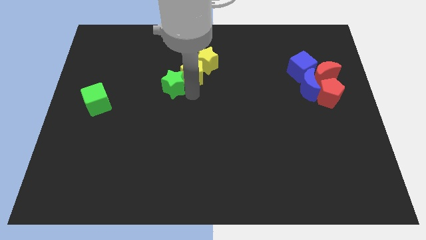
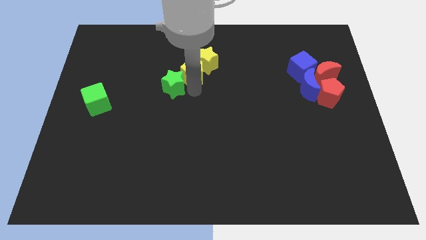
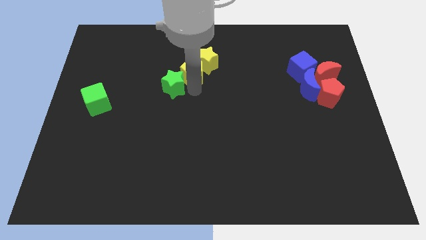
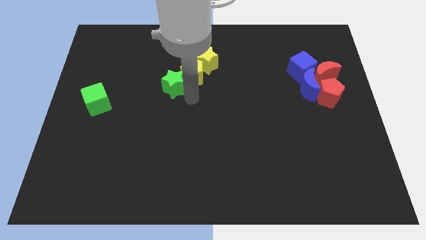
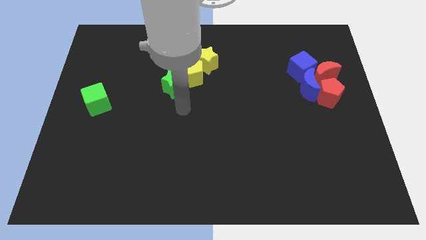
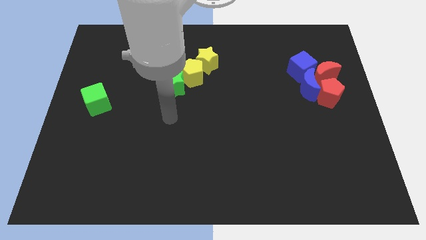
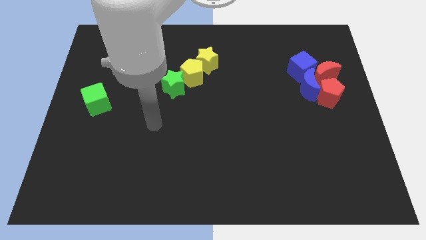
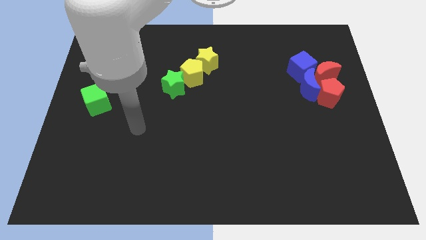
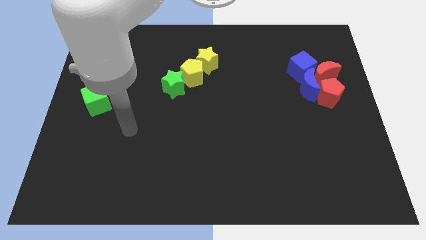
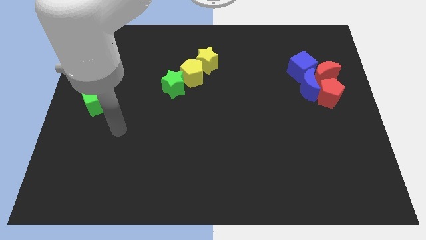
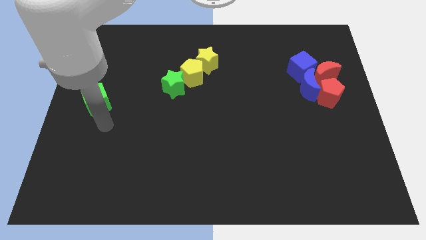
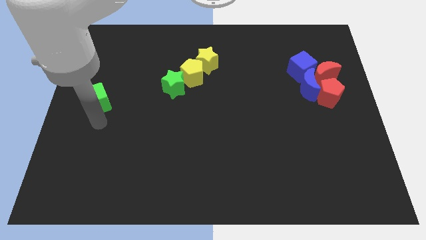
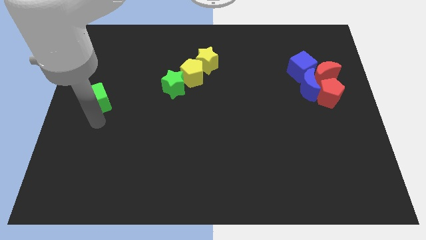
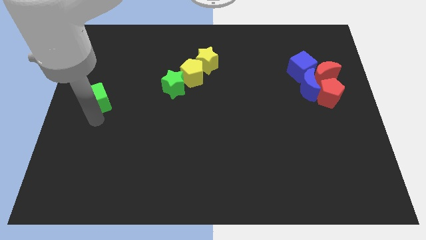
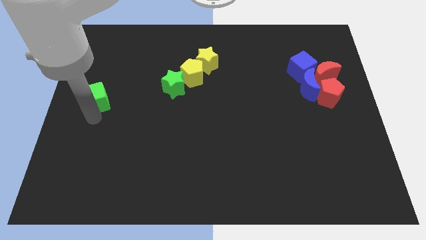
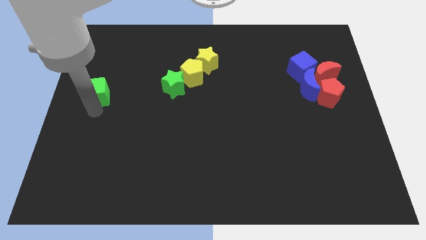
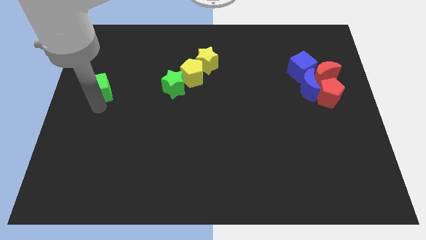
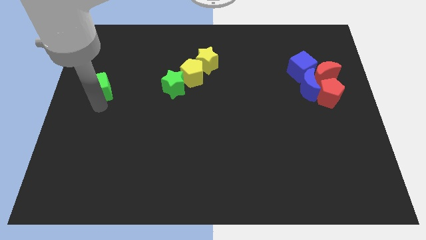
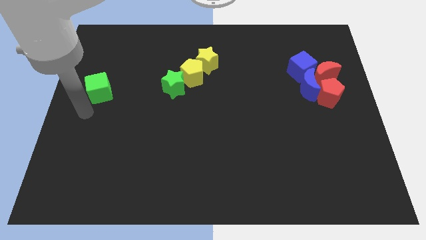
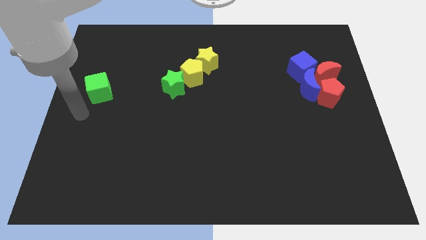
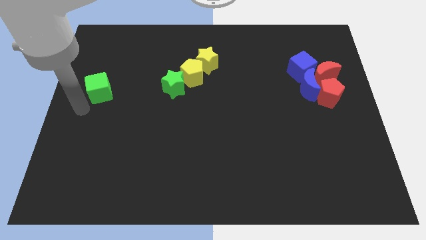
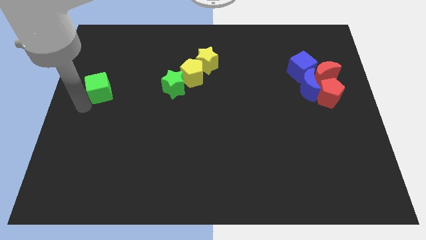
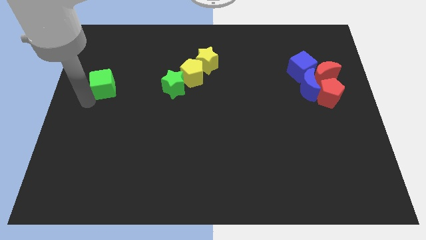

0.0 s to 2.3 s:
move the green cube parallel to the green star

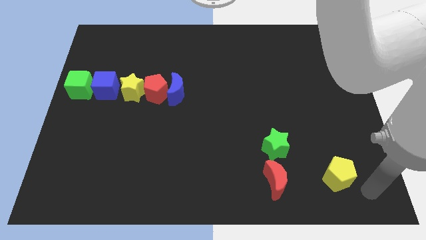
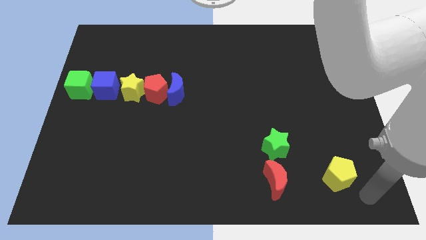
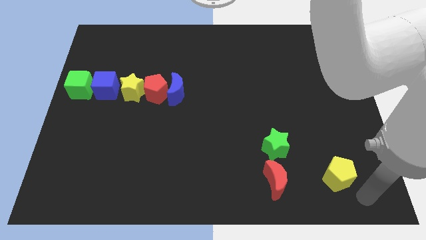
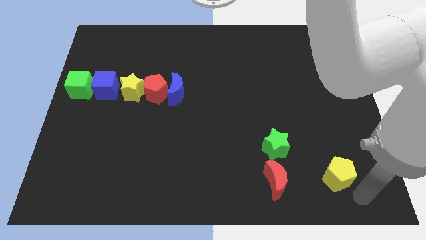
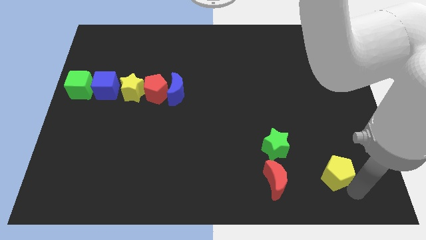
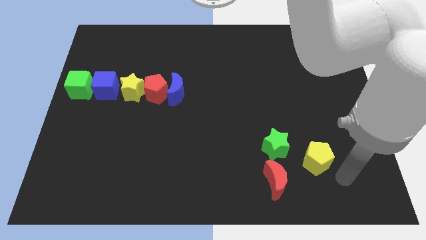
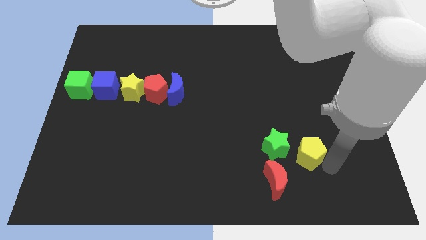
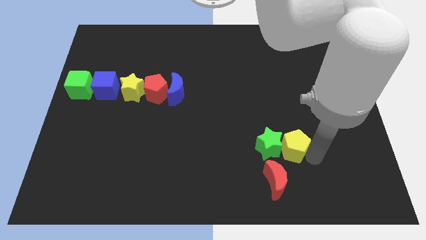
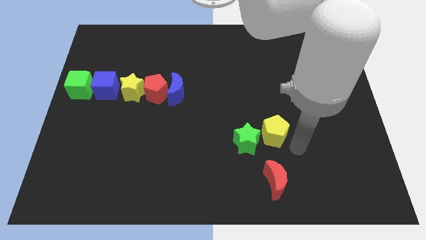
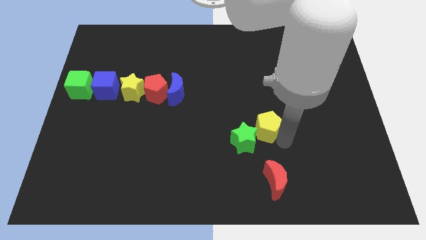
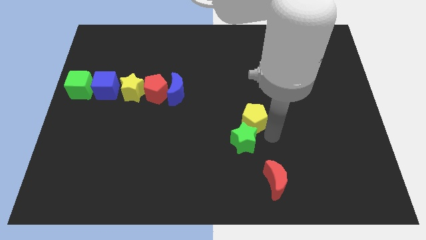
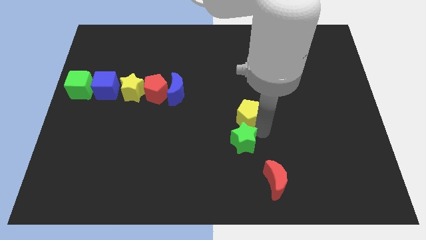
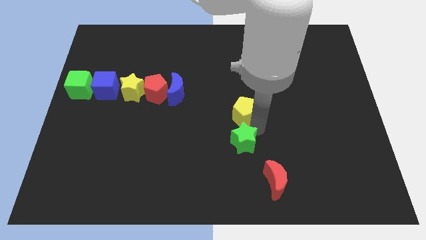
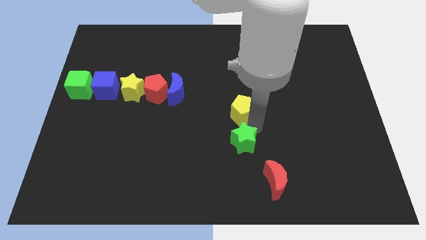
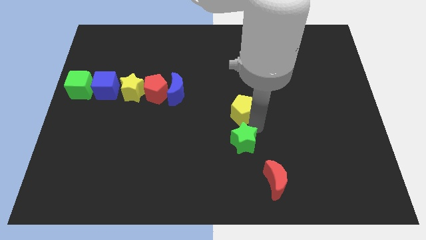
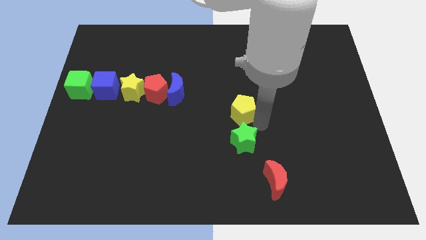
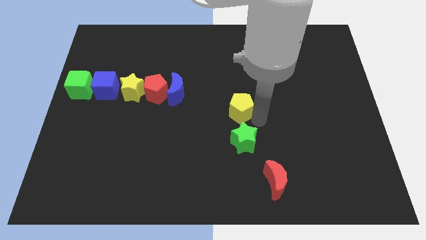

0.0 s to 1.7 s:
place yellow pentagon above green star

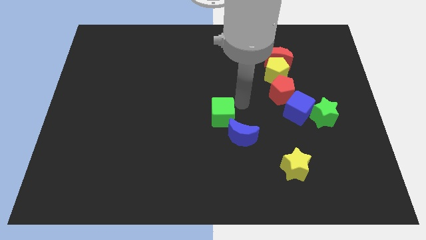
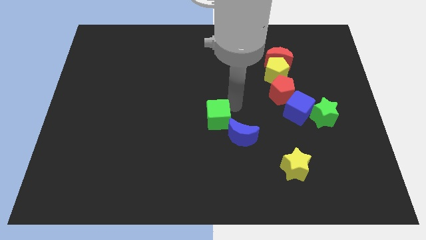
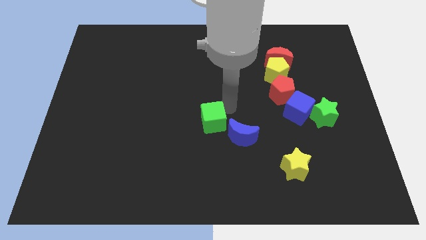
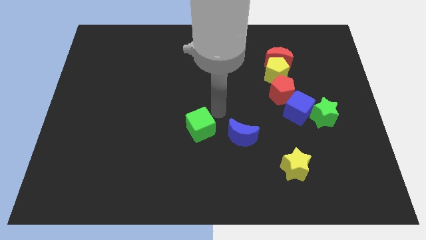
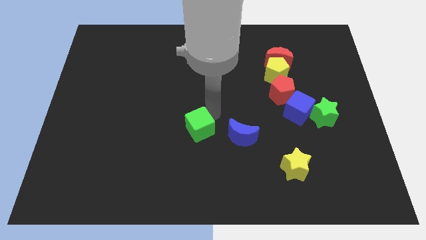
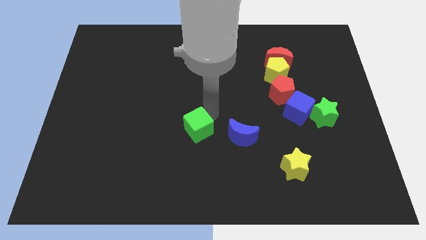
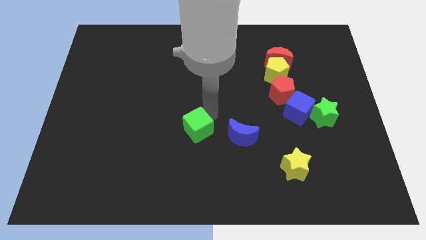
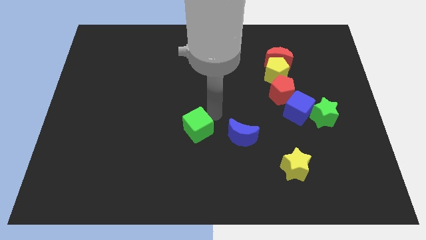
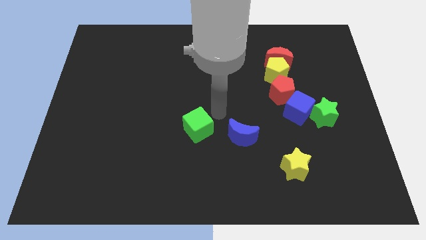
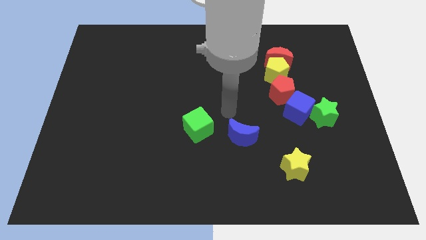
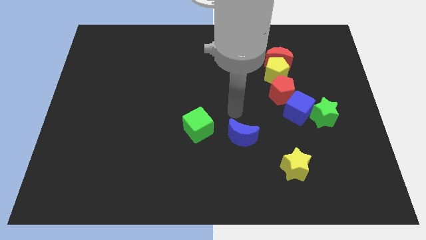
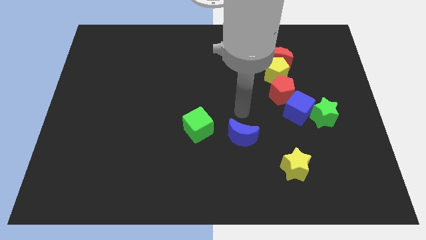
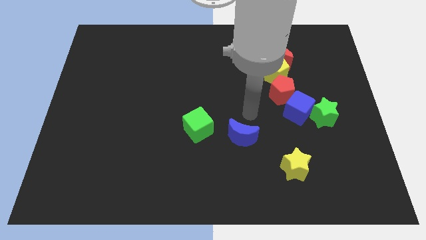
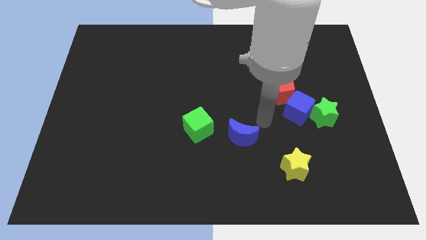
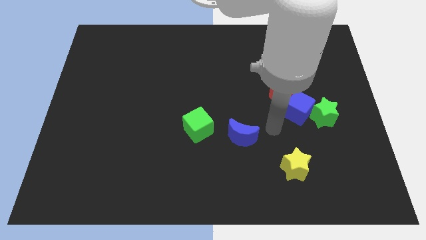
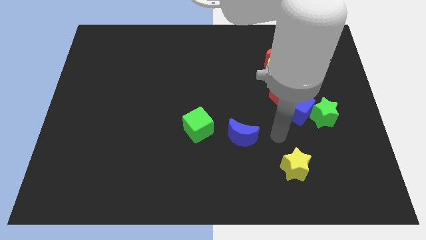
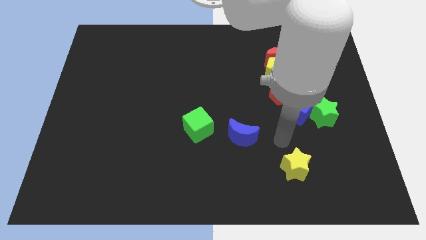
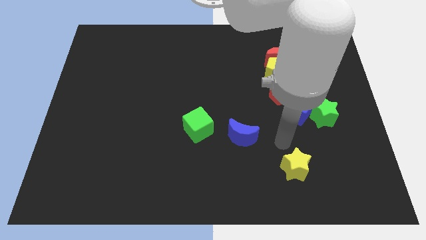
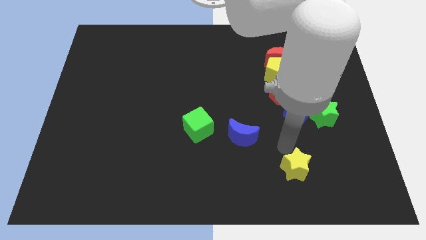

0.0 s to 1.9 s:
slide the green cube to the left of the blue moon

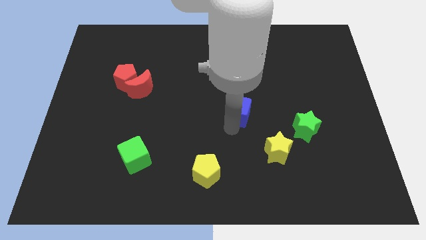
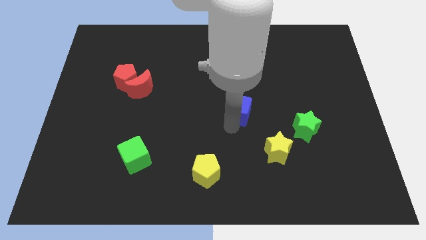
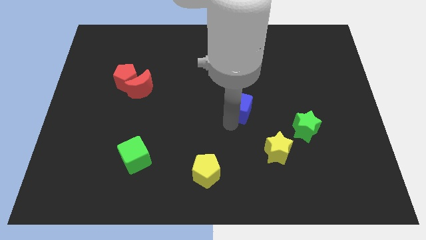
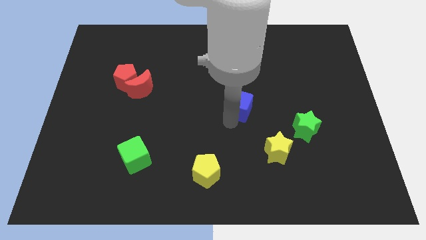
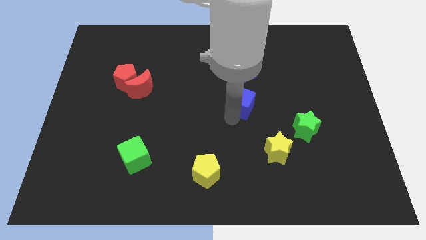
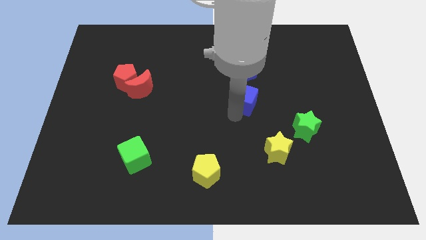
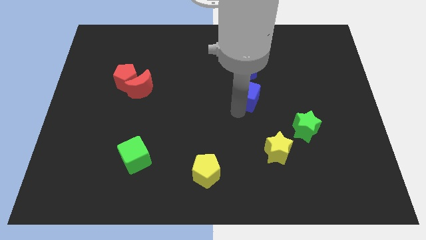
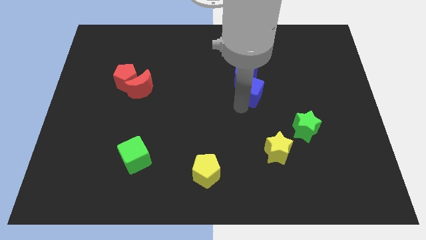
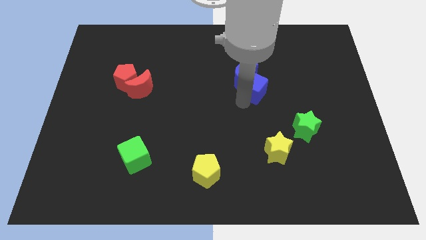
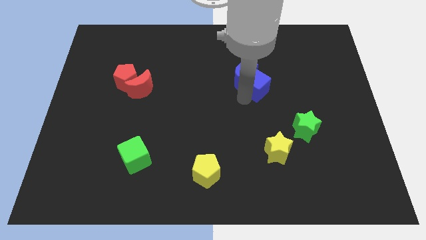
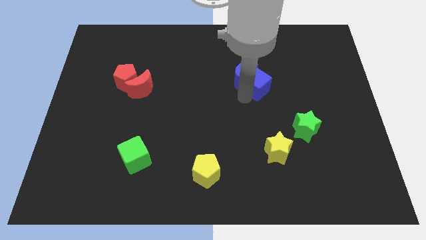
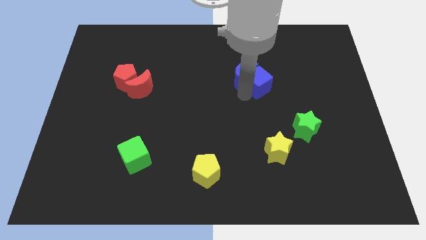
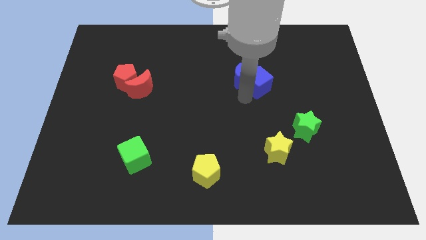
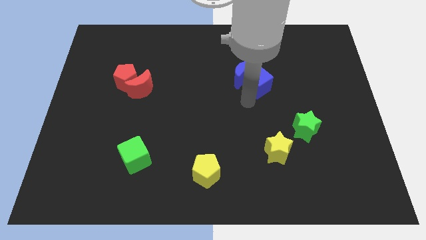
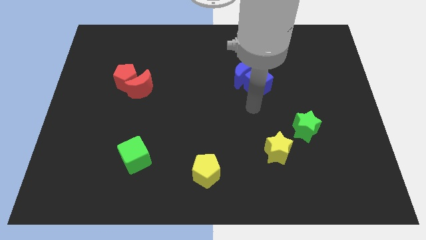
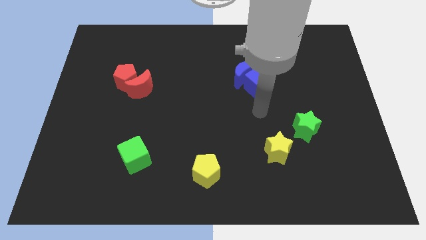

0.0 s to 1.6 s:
move the blue cube into the blue crescent

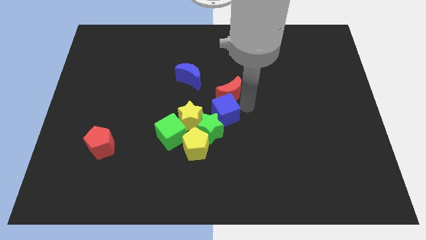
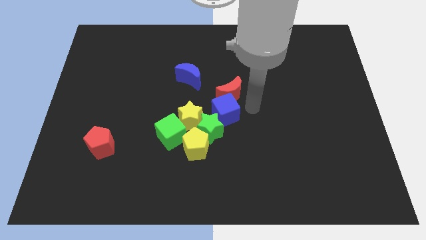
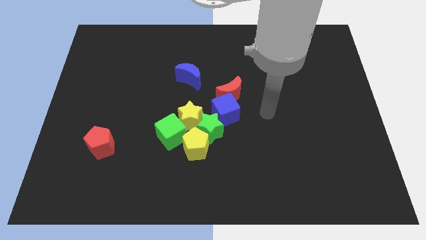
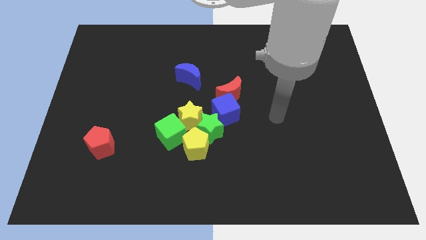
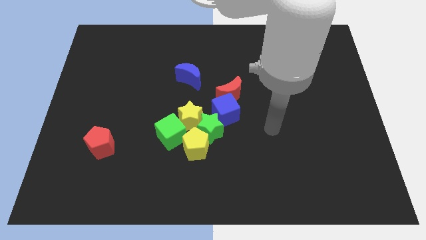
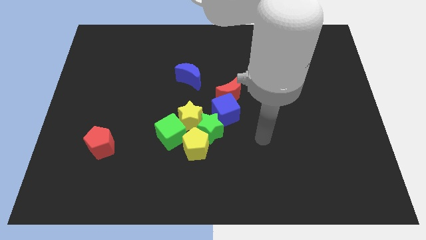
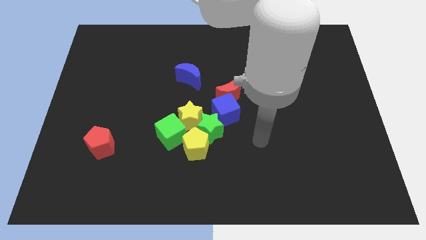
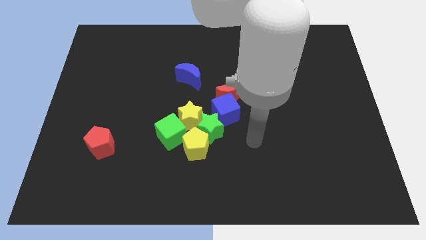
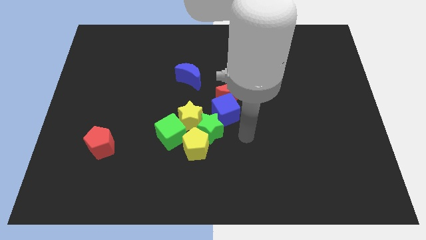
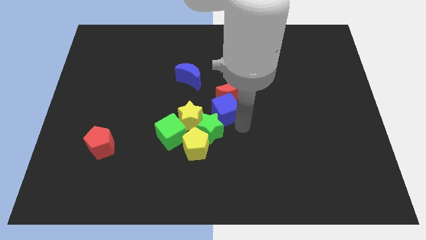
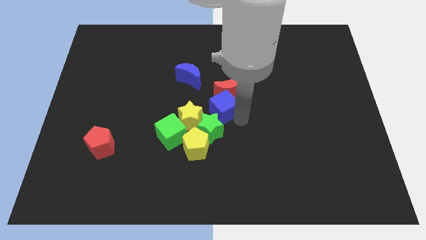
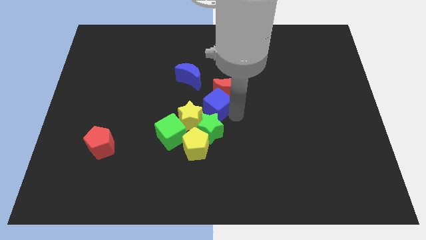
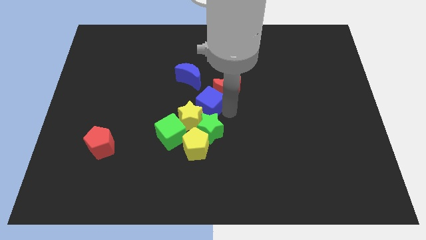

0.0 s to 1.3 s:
push blue cube towards blue moon
